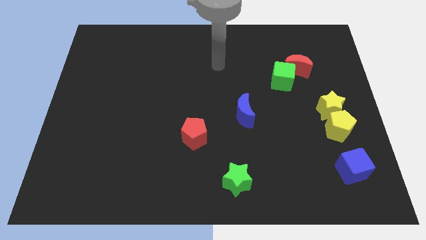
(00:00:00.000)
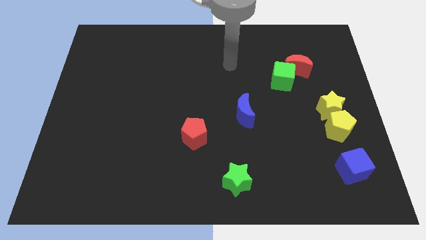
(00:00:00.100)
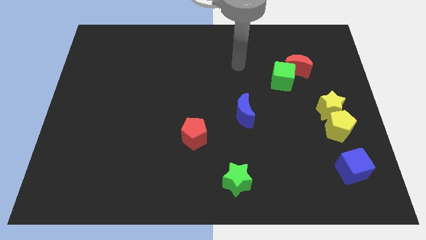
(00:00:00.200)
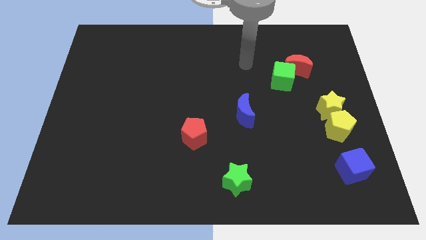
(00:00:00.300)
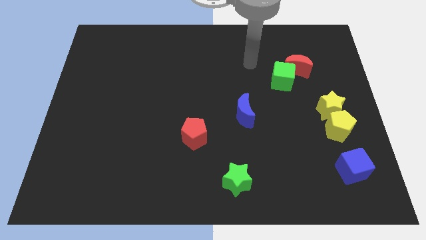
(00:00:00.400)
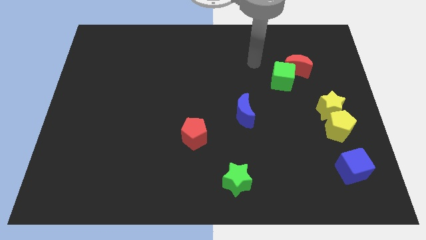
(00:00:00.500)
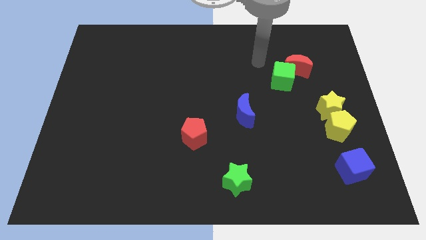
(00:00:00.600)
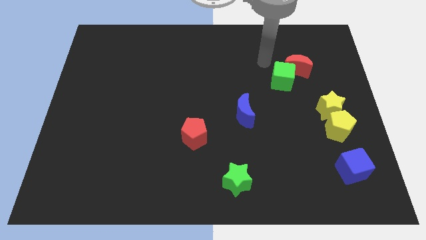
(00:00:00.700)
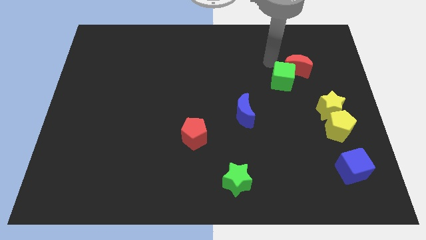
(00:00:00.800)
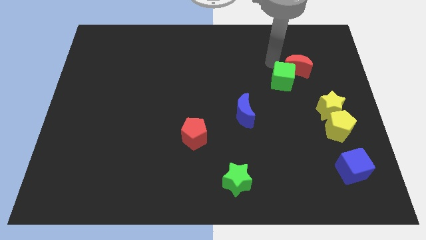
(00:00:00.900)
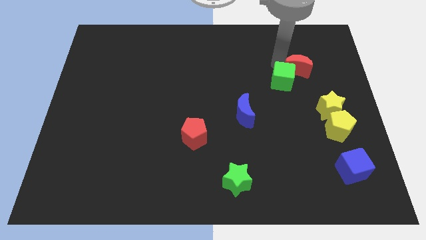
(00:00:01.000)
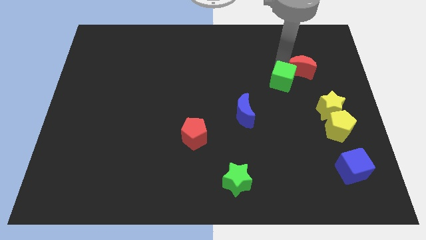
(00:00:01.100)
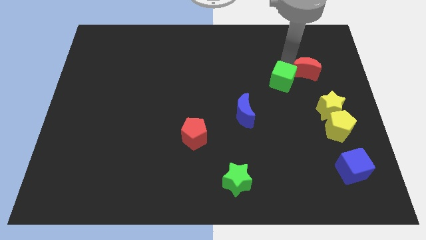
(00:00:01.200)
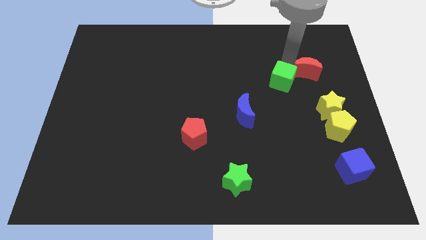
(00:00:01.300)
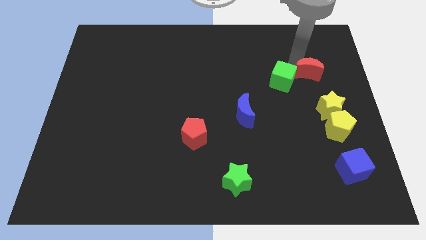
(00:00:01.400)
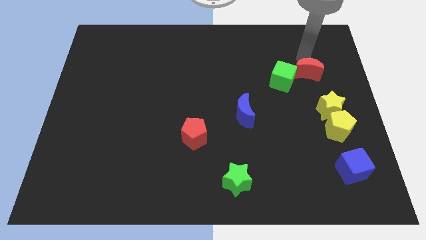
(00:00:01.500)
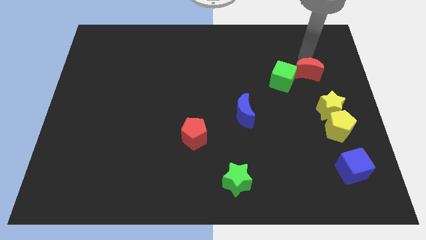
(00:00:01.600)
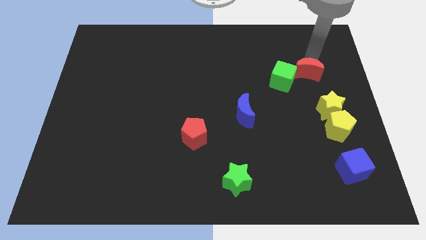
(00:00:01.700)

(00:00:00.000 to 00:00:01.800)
move the arm towards the red crescent

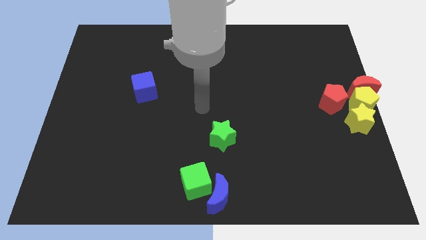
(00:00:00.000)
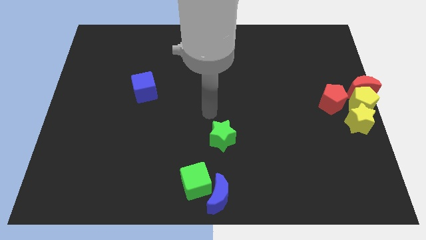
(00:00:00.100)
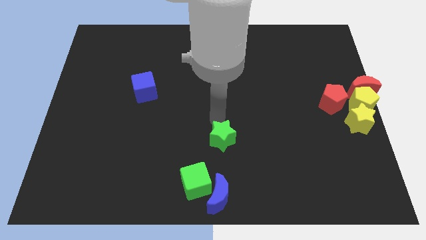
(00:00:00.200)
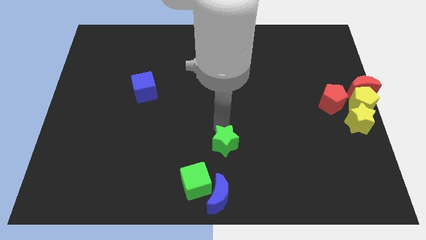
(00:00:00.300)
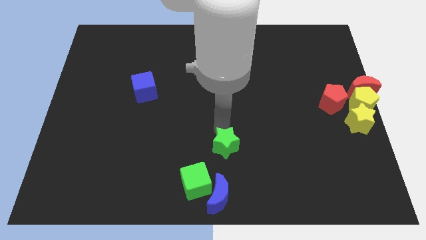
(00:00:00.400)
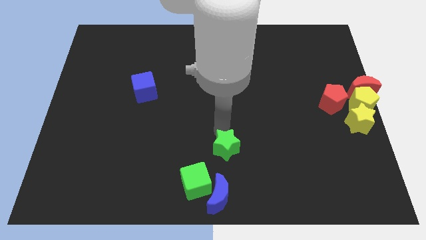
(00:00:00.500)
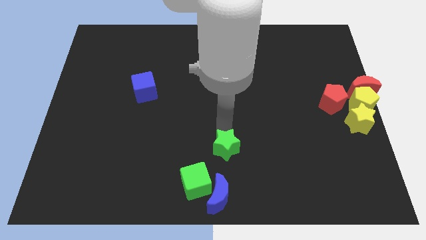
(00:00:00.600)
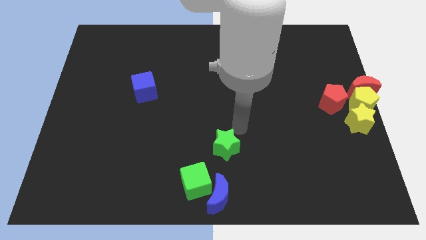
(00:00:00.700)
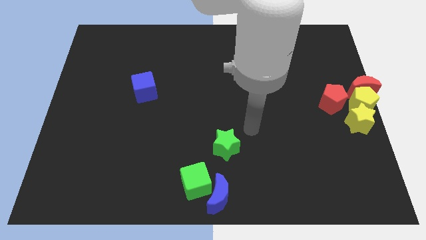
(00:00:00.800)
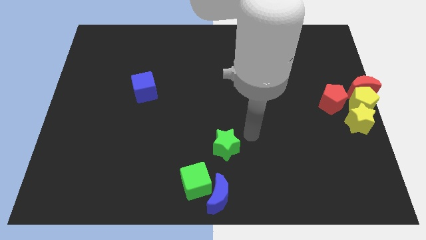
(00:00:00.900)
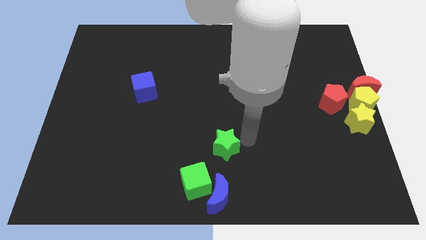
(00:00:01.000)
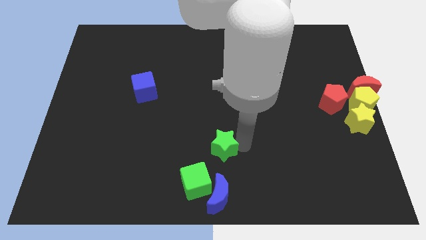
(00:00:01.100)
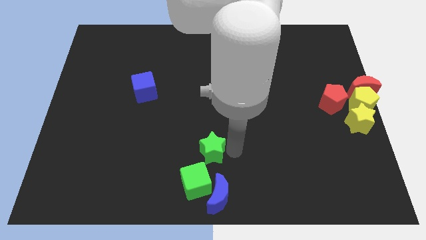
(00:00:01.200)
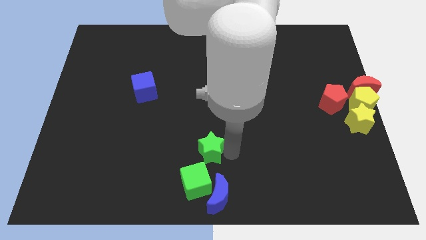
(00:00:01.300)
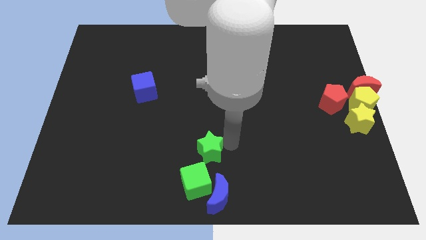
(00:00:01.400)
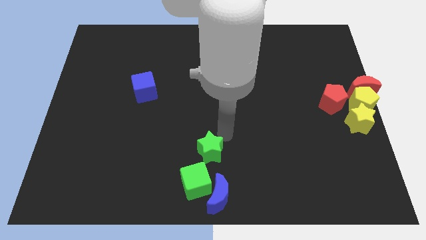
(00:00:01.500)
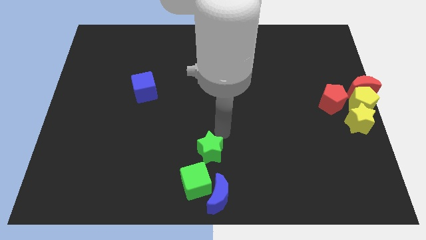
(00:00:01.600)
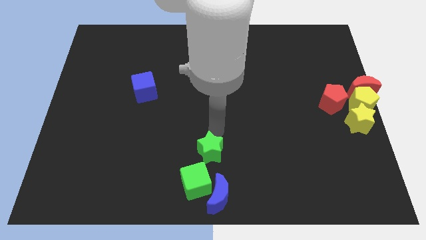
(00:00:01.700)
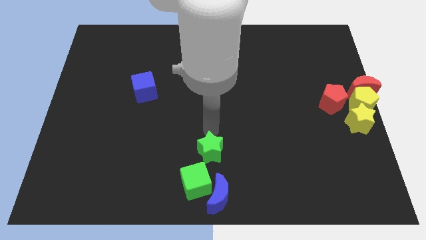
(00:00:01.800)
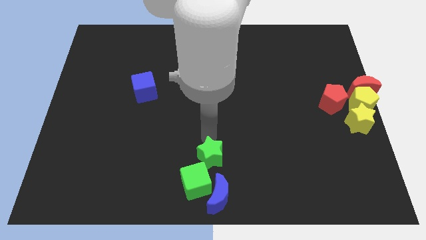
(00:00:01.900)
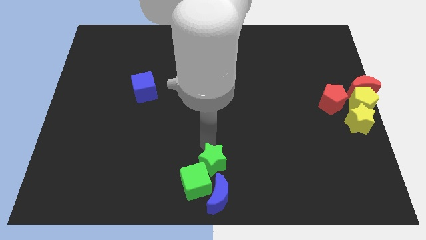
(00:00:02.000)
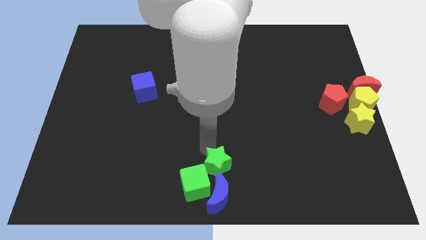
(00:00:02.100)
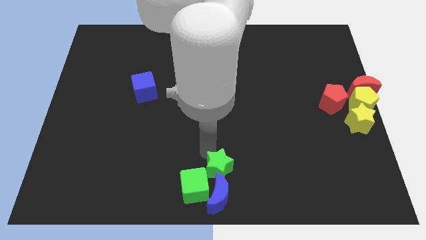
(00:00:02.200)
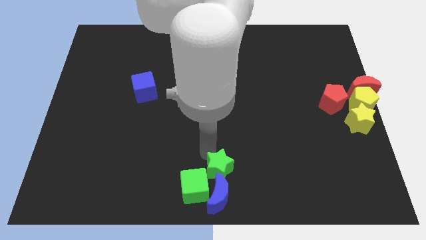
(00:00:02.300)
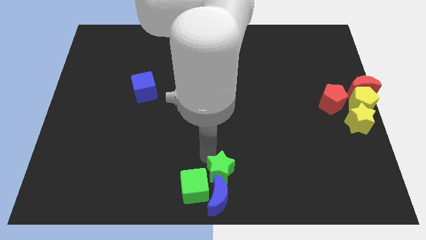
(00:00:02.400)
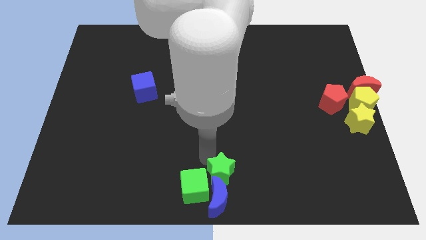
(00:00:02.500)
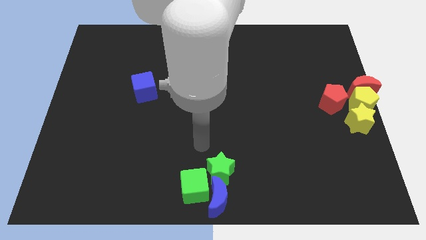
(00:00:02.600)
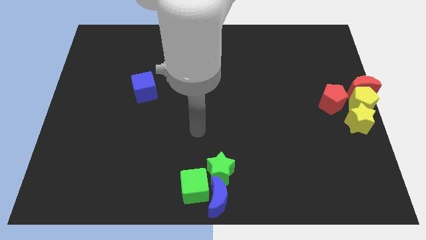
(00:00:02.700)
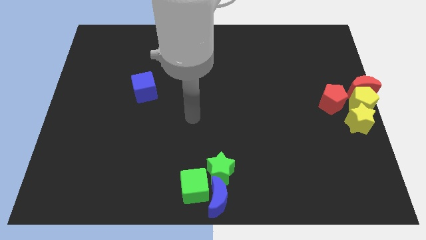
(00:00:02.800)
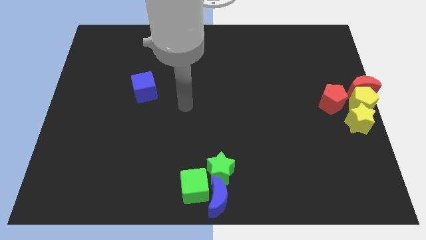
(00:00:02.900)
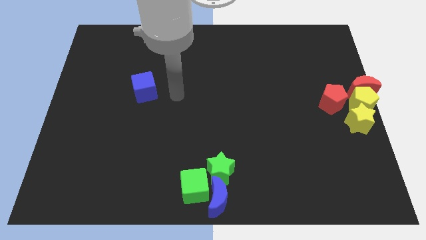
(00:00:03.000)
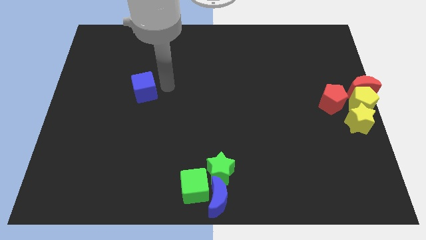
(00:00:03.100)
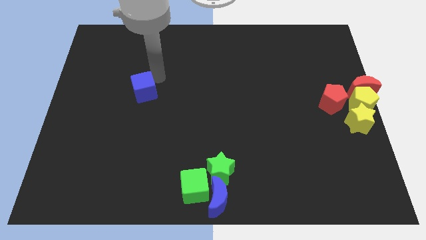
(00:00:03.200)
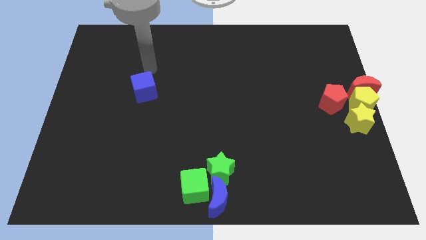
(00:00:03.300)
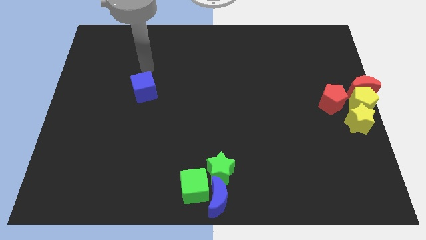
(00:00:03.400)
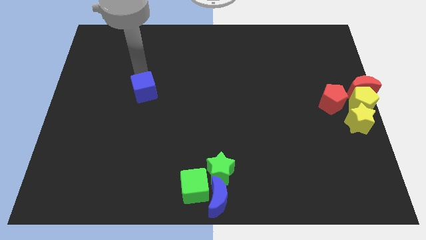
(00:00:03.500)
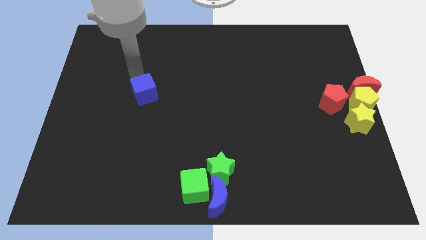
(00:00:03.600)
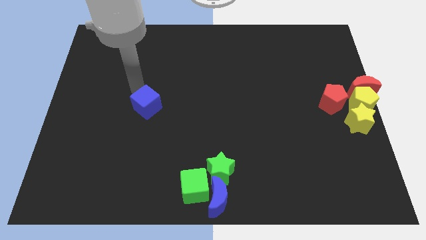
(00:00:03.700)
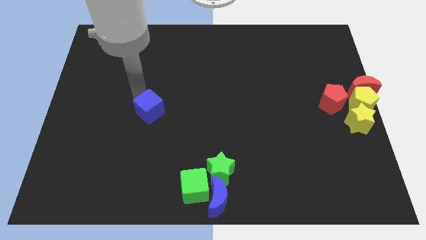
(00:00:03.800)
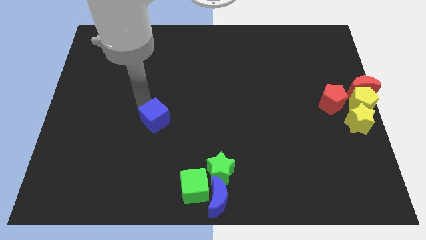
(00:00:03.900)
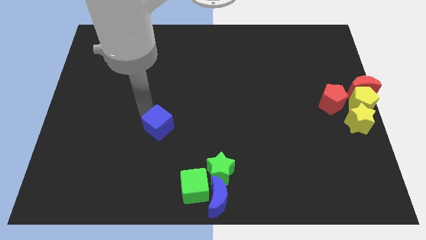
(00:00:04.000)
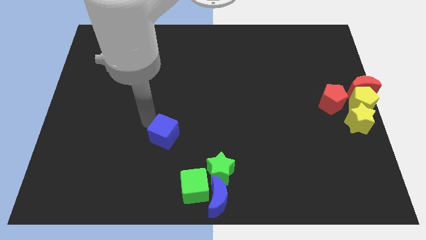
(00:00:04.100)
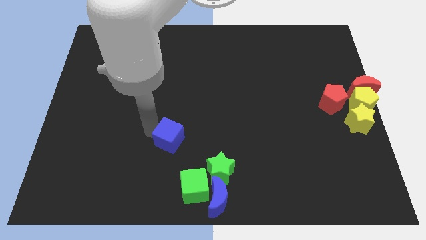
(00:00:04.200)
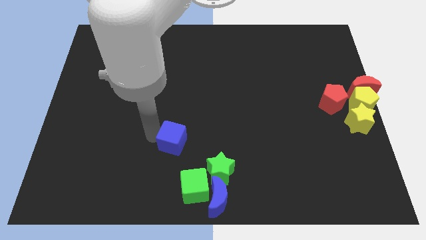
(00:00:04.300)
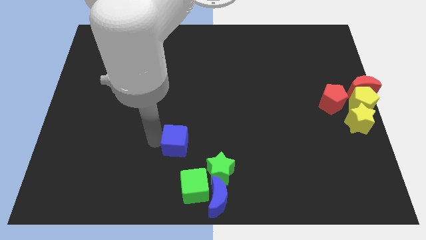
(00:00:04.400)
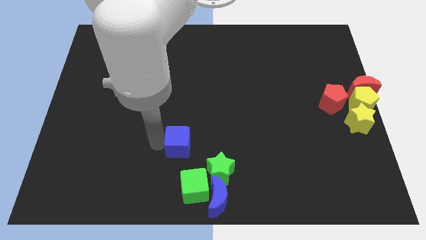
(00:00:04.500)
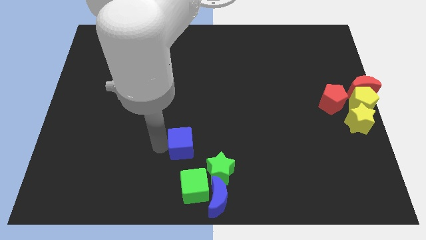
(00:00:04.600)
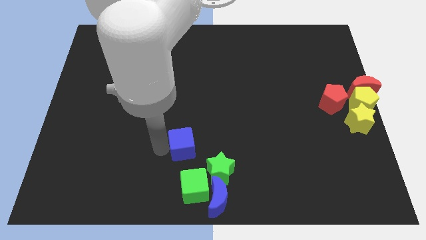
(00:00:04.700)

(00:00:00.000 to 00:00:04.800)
push the green star into the blue moon

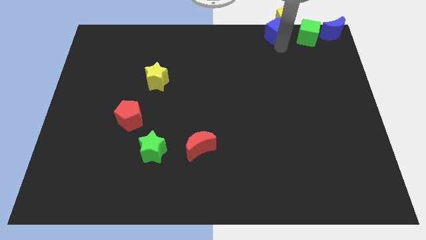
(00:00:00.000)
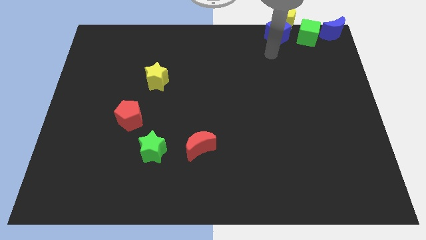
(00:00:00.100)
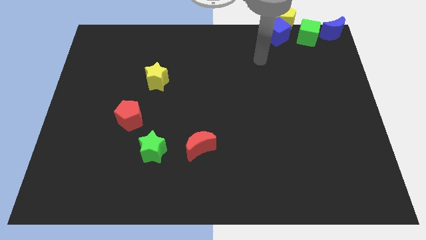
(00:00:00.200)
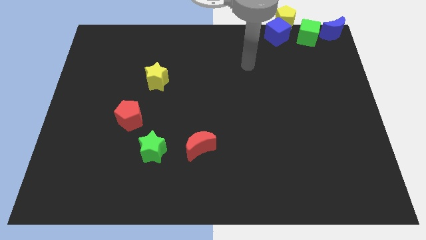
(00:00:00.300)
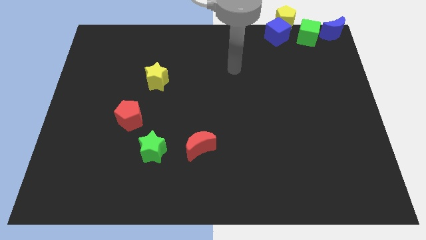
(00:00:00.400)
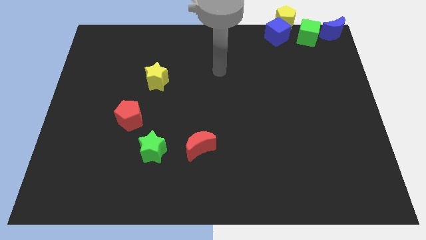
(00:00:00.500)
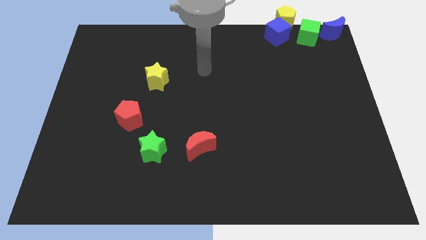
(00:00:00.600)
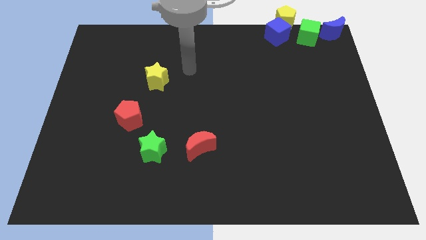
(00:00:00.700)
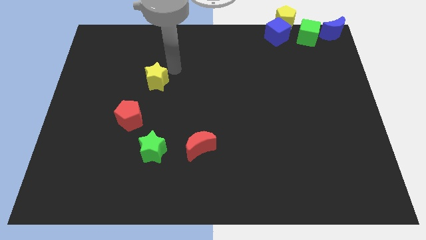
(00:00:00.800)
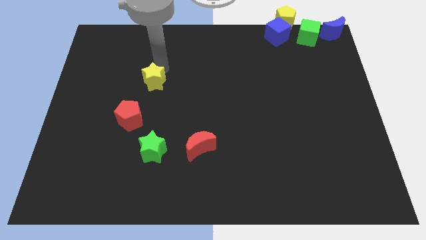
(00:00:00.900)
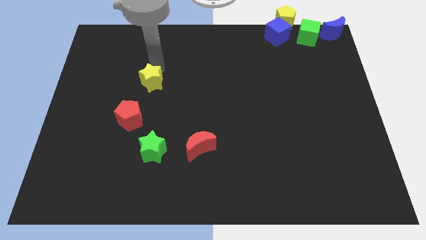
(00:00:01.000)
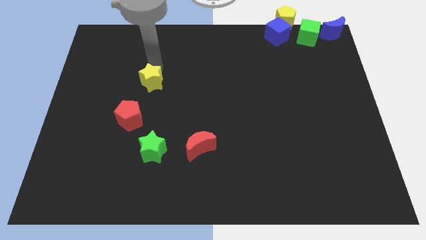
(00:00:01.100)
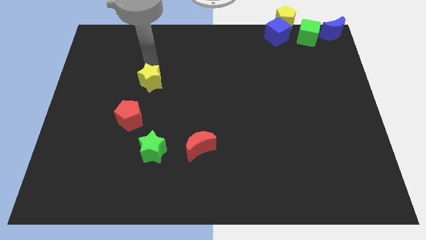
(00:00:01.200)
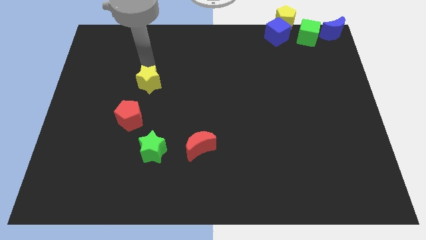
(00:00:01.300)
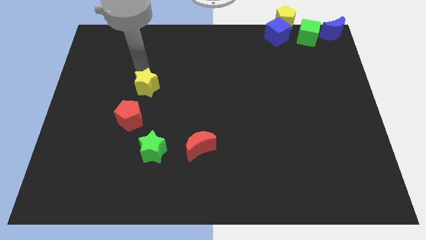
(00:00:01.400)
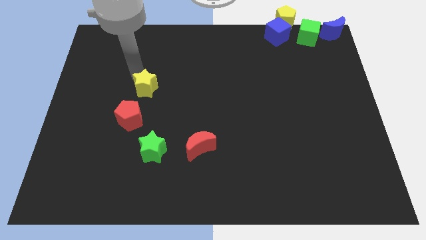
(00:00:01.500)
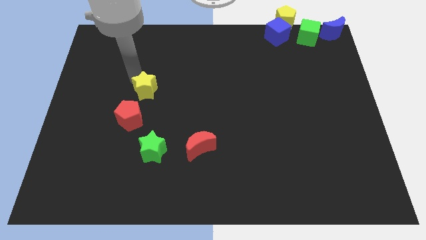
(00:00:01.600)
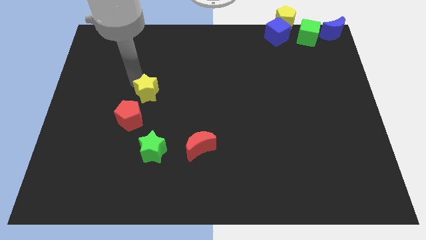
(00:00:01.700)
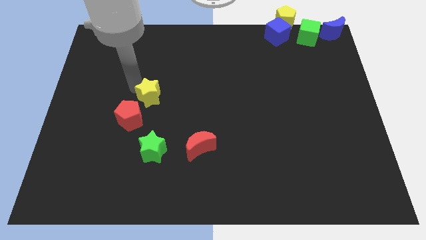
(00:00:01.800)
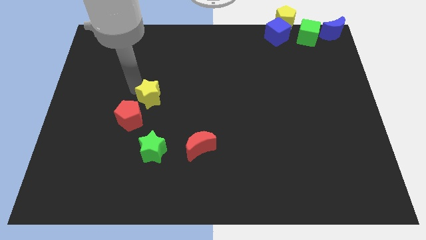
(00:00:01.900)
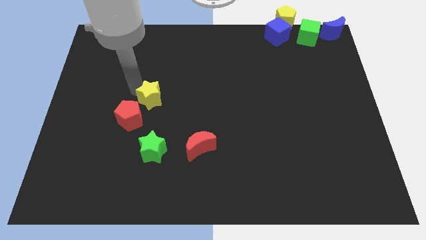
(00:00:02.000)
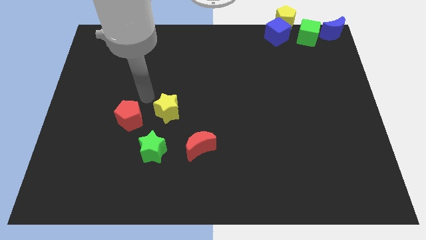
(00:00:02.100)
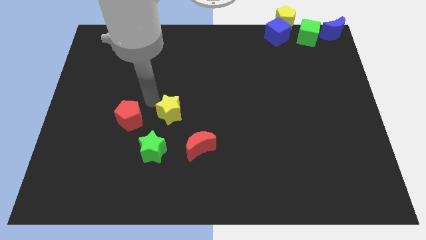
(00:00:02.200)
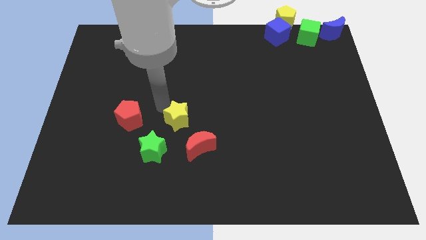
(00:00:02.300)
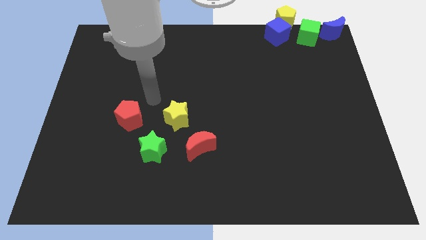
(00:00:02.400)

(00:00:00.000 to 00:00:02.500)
place the yellow star to the right of the red pentagon
